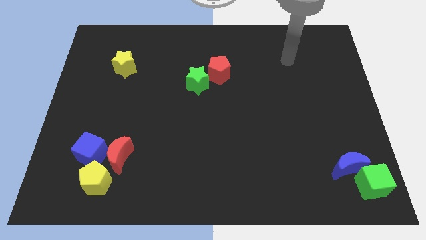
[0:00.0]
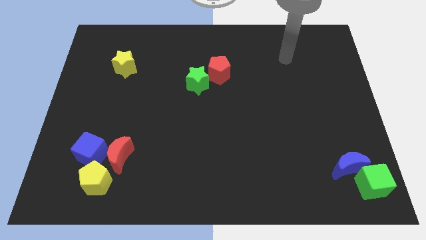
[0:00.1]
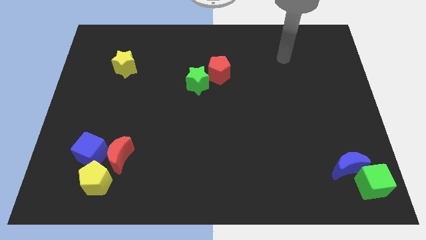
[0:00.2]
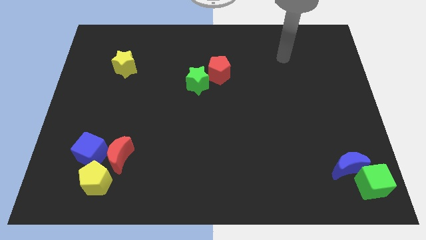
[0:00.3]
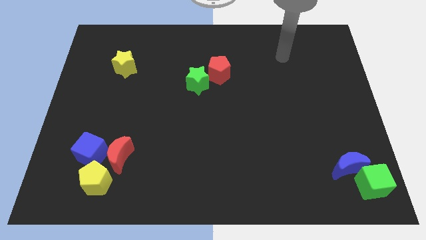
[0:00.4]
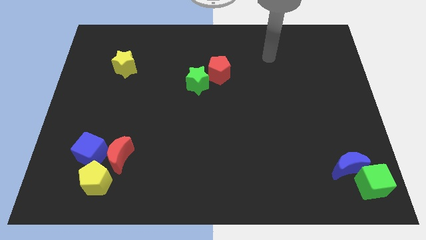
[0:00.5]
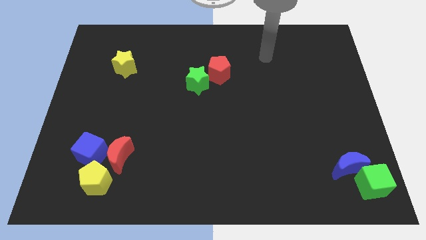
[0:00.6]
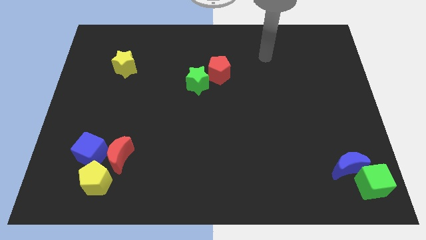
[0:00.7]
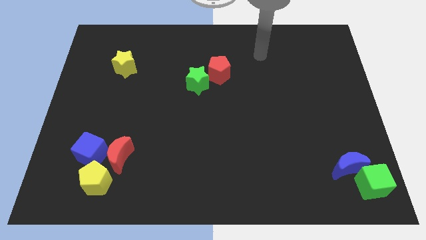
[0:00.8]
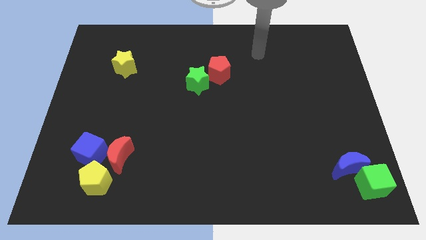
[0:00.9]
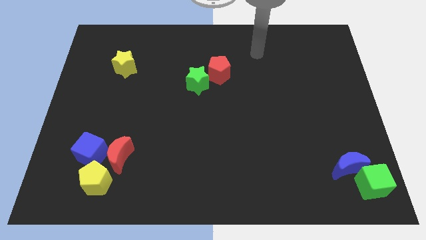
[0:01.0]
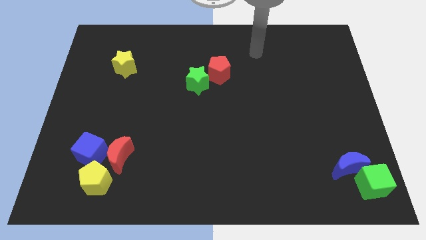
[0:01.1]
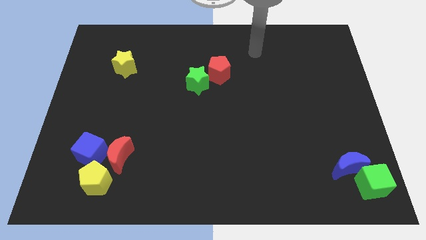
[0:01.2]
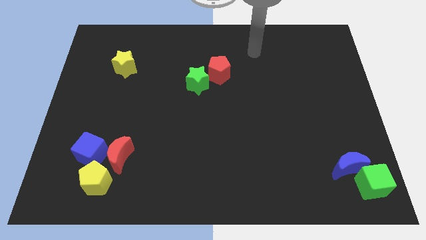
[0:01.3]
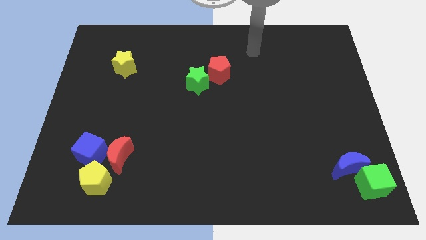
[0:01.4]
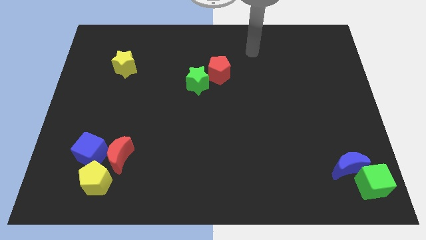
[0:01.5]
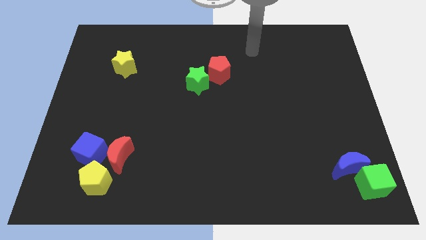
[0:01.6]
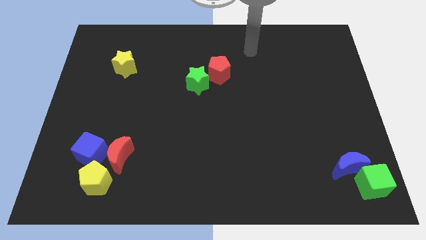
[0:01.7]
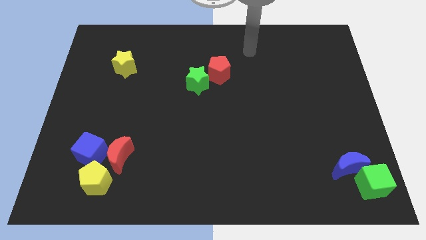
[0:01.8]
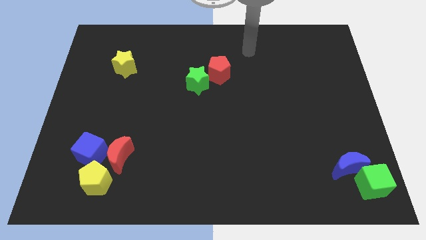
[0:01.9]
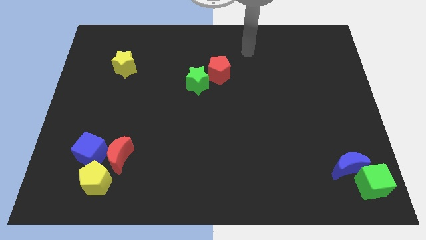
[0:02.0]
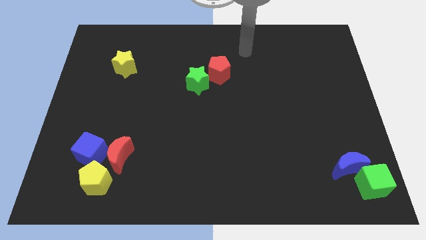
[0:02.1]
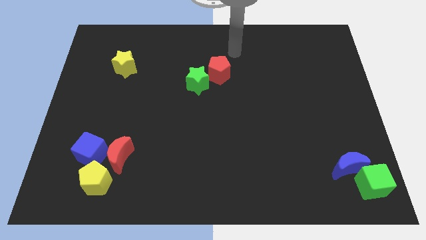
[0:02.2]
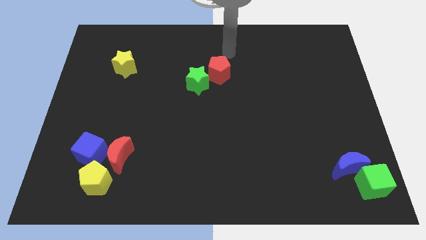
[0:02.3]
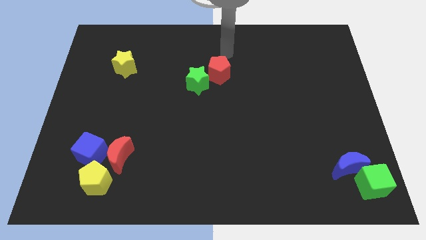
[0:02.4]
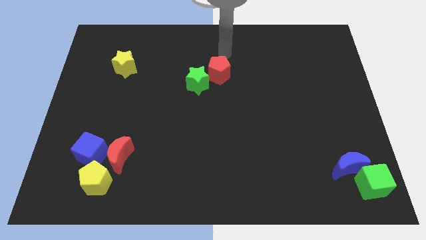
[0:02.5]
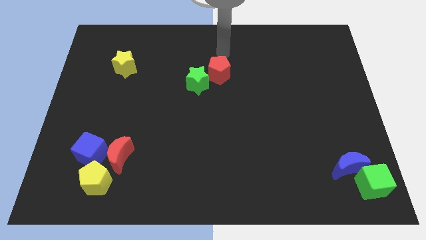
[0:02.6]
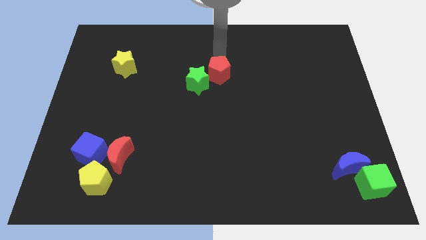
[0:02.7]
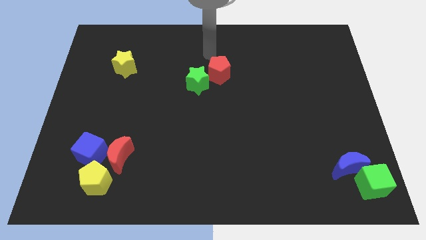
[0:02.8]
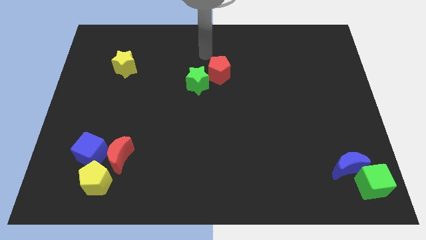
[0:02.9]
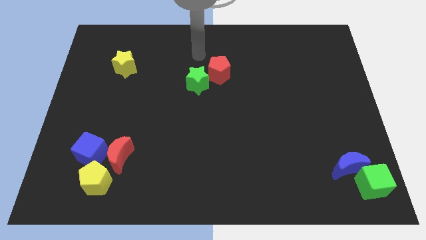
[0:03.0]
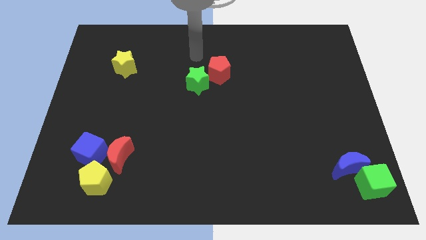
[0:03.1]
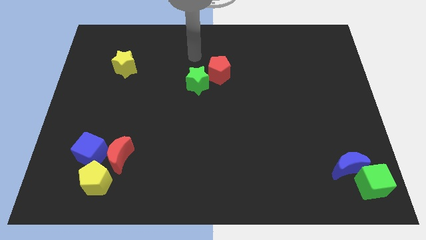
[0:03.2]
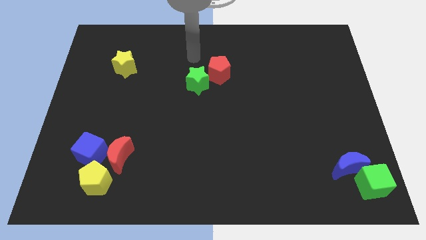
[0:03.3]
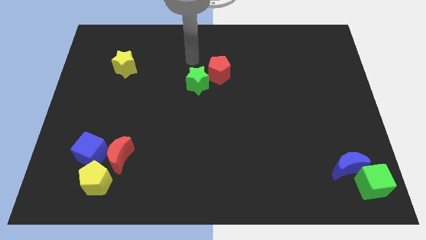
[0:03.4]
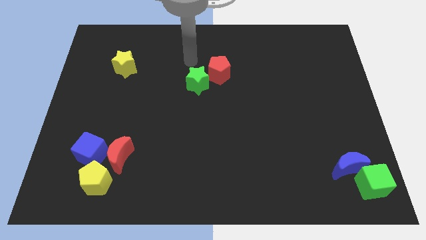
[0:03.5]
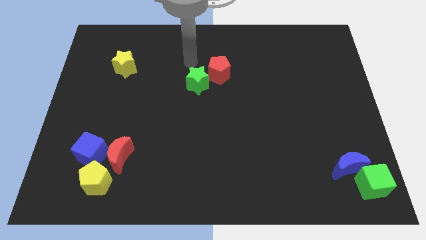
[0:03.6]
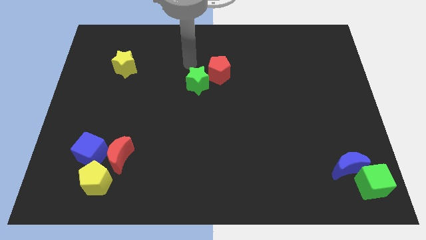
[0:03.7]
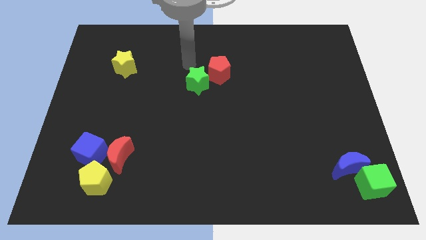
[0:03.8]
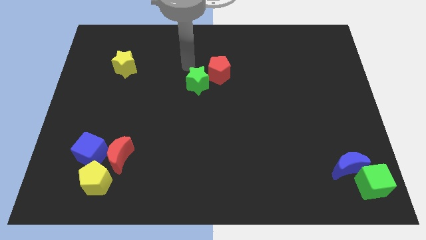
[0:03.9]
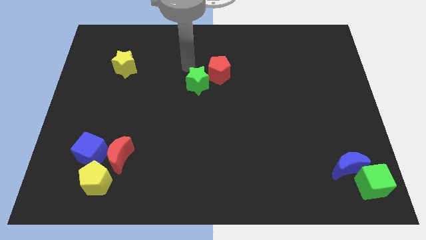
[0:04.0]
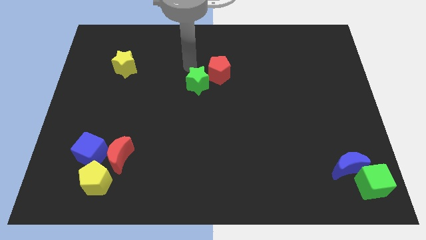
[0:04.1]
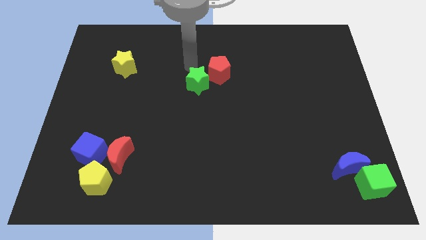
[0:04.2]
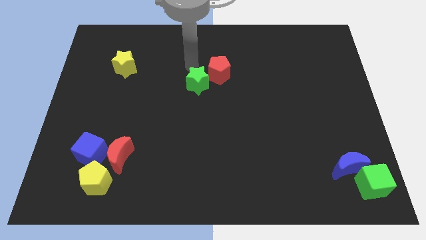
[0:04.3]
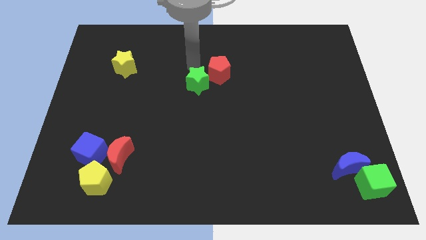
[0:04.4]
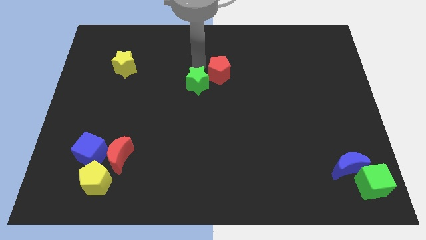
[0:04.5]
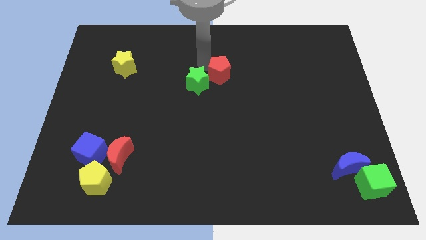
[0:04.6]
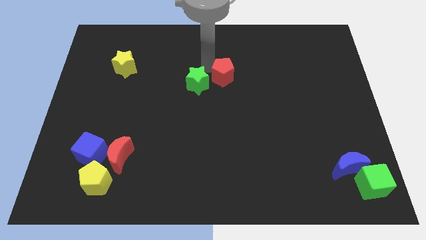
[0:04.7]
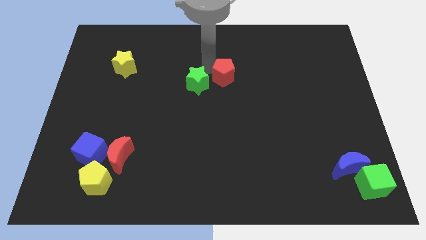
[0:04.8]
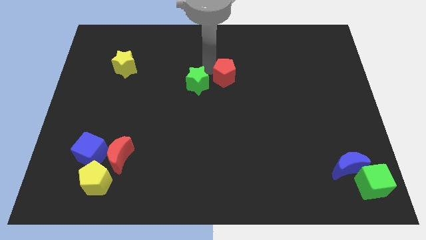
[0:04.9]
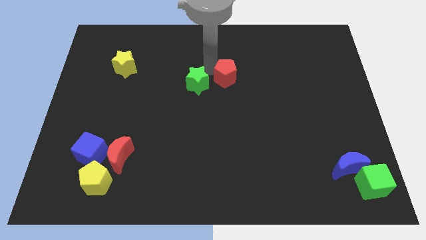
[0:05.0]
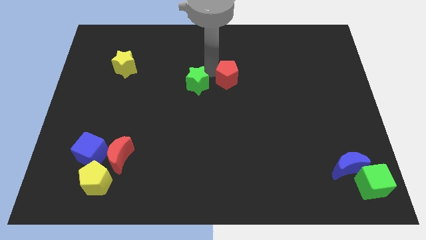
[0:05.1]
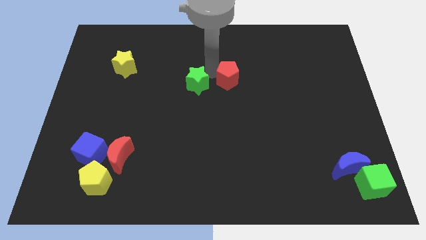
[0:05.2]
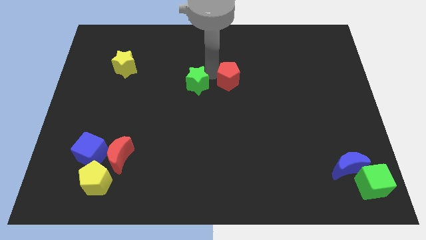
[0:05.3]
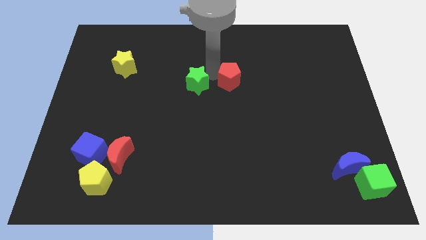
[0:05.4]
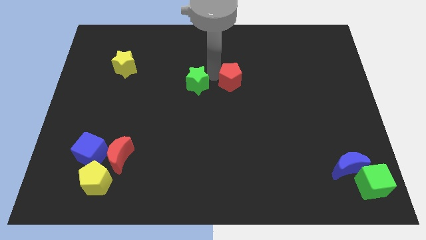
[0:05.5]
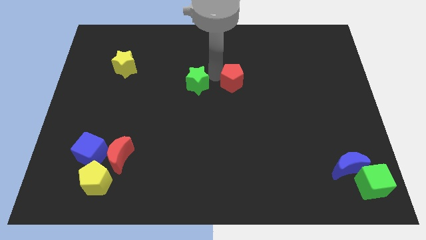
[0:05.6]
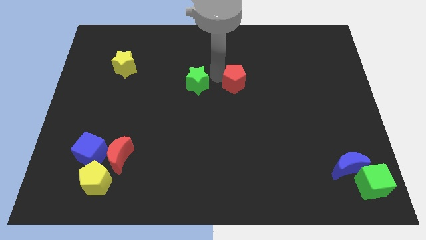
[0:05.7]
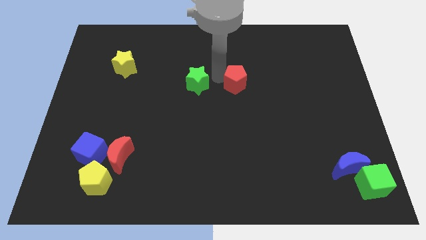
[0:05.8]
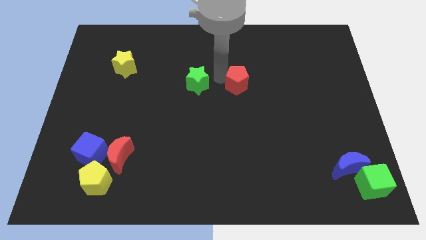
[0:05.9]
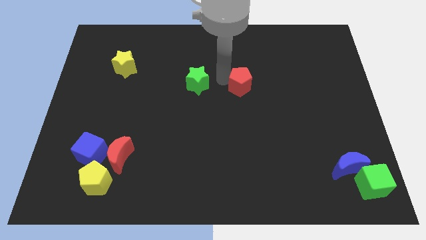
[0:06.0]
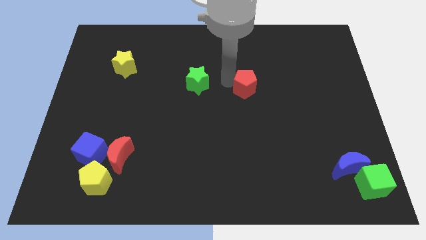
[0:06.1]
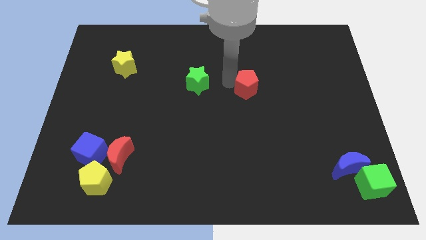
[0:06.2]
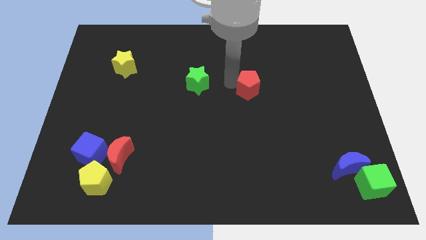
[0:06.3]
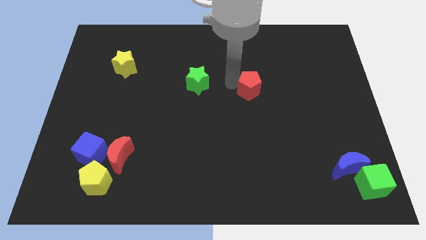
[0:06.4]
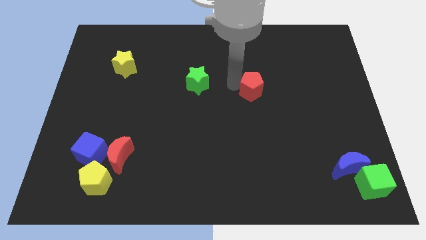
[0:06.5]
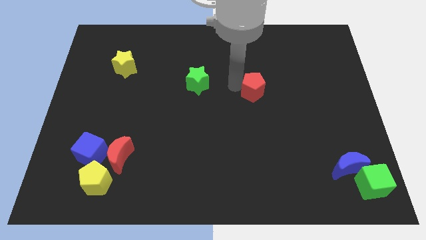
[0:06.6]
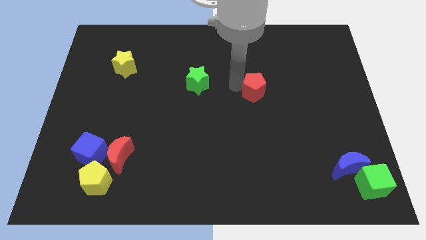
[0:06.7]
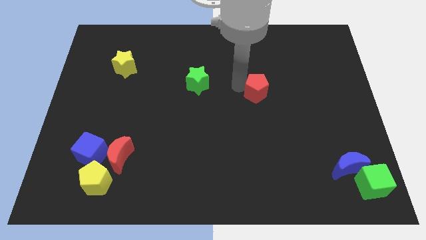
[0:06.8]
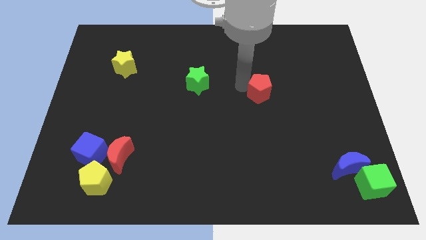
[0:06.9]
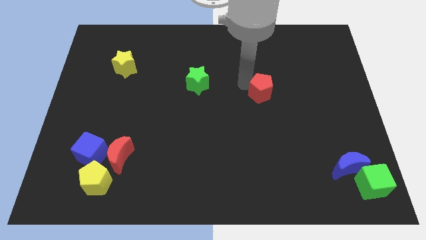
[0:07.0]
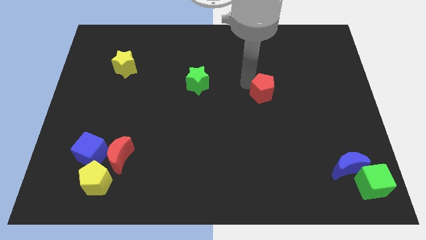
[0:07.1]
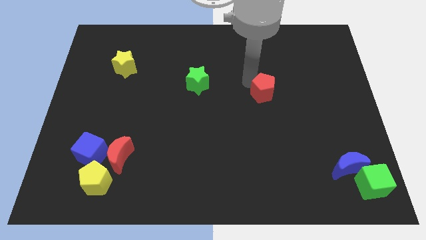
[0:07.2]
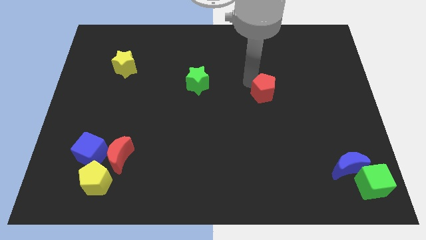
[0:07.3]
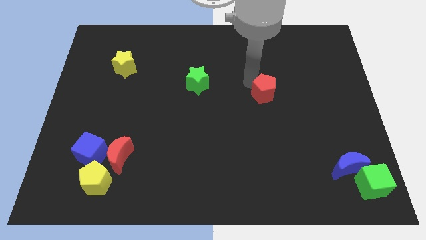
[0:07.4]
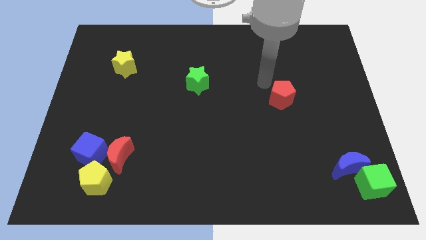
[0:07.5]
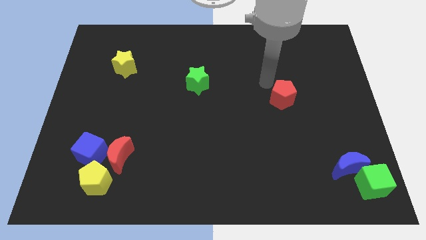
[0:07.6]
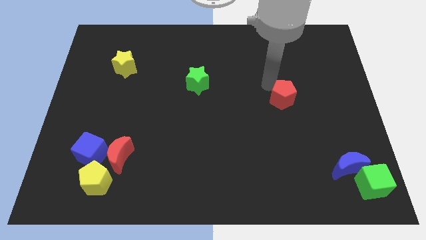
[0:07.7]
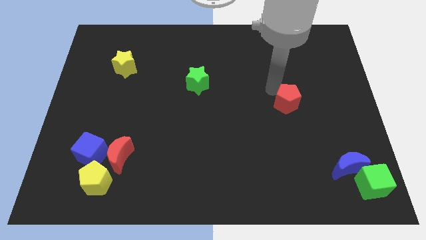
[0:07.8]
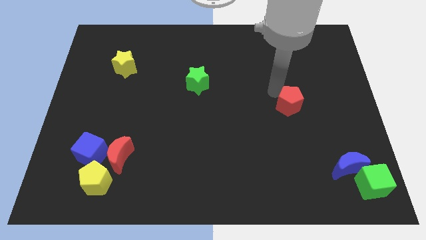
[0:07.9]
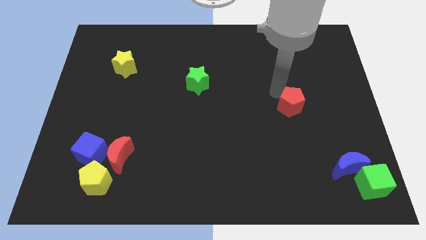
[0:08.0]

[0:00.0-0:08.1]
push the red pentagon to the bottom right of the board

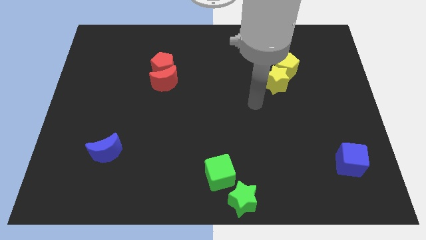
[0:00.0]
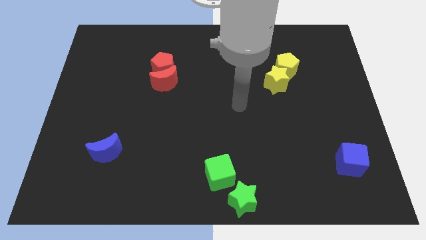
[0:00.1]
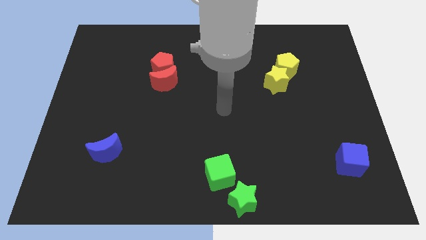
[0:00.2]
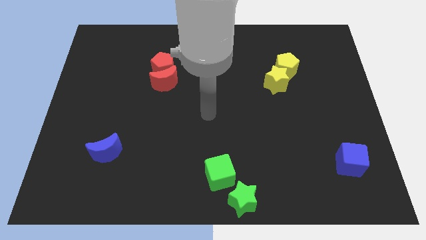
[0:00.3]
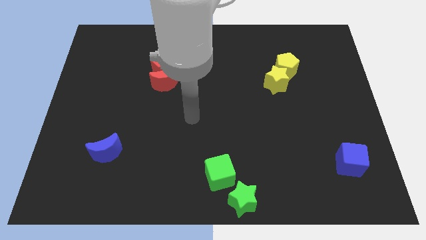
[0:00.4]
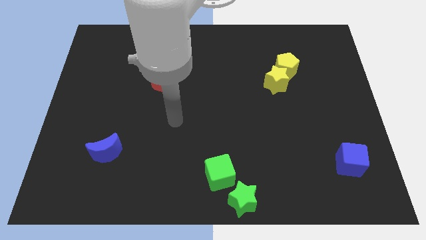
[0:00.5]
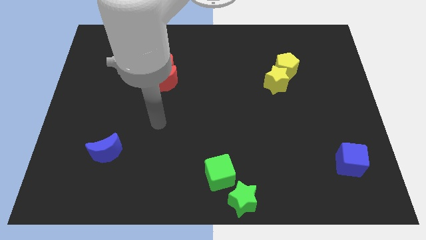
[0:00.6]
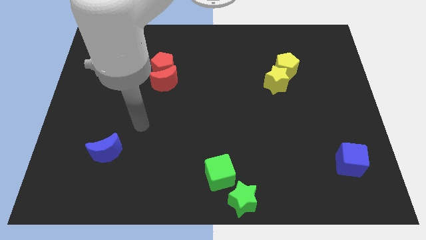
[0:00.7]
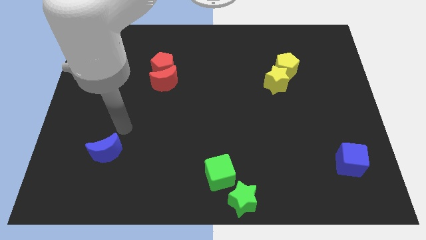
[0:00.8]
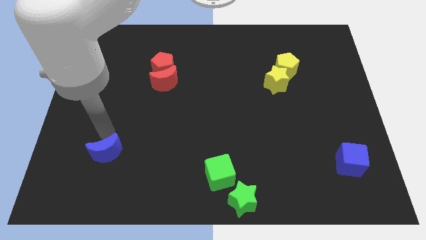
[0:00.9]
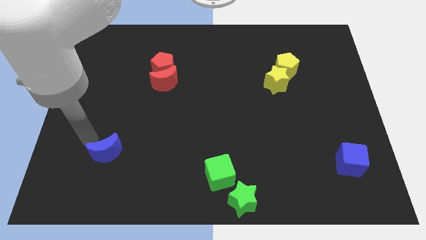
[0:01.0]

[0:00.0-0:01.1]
point your arm at the top of blue moon
